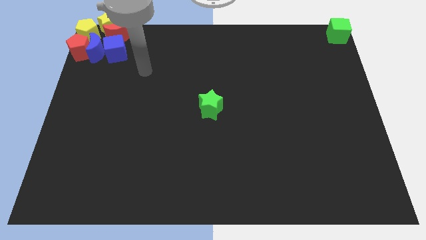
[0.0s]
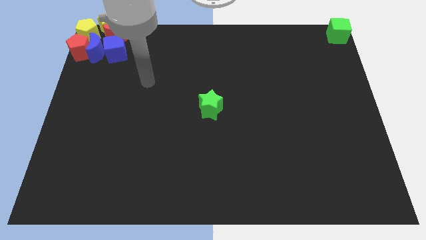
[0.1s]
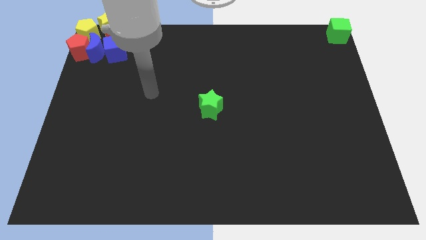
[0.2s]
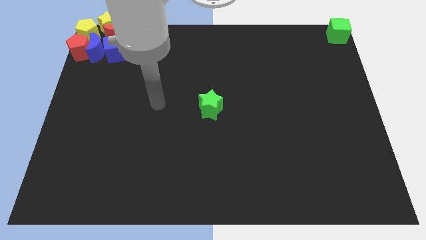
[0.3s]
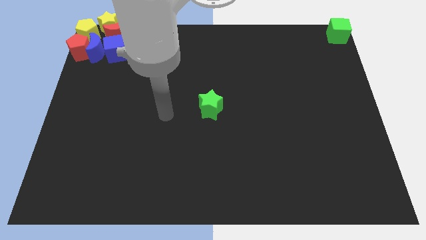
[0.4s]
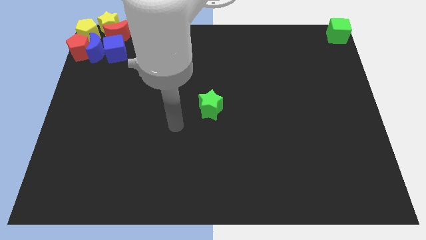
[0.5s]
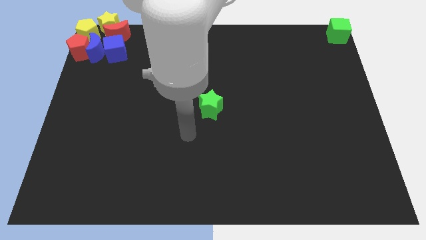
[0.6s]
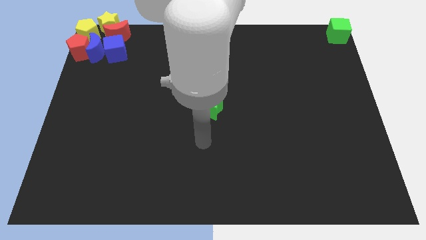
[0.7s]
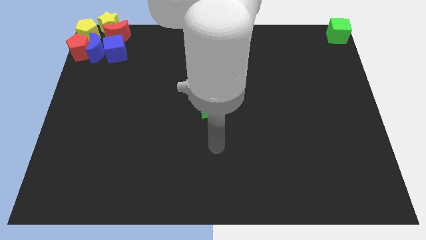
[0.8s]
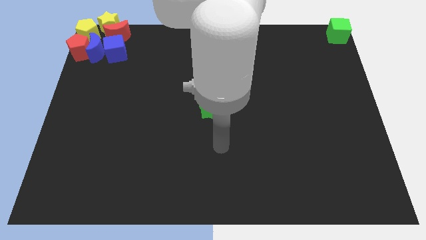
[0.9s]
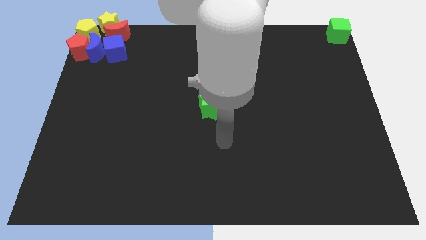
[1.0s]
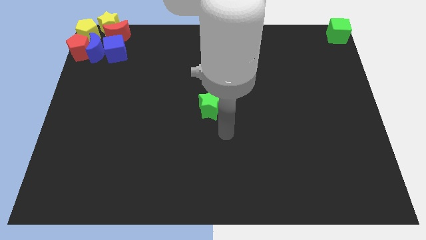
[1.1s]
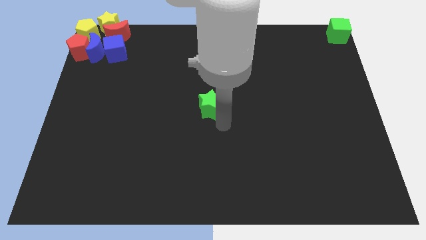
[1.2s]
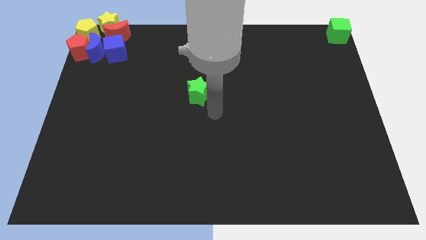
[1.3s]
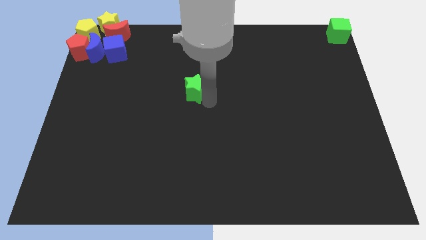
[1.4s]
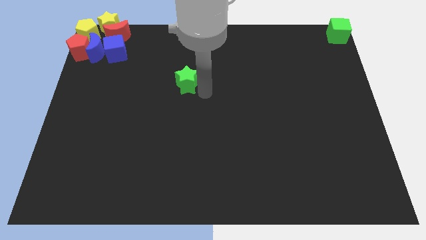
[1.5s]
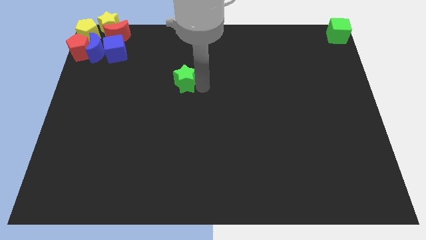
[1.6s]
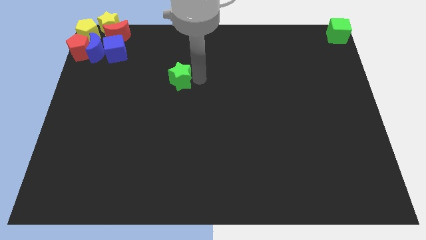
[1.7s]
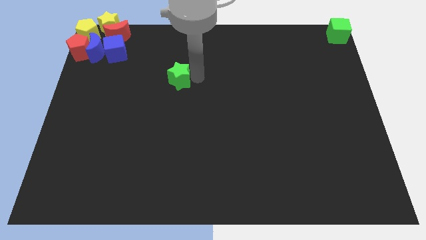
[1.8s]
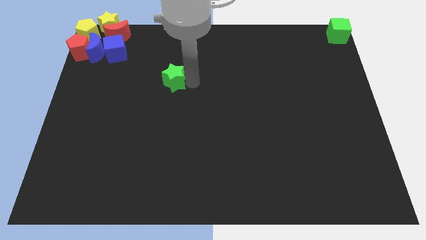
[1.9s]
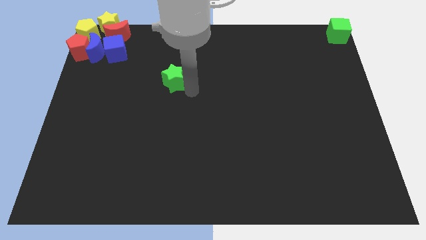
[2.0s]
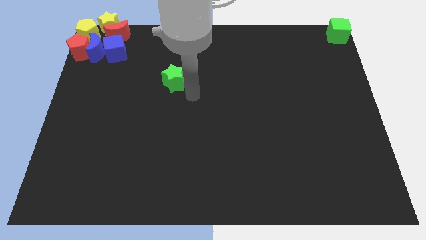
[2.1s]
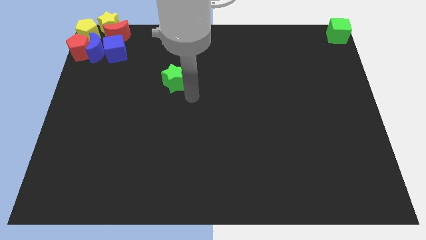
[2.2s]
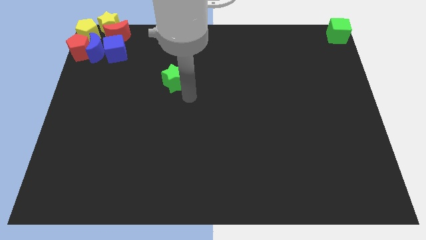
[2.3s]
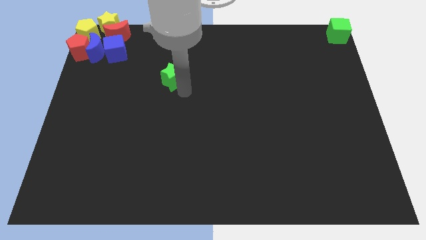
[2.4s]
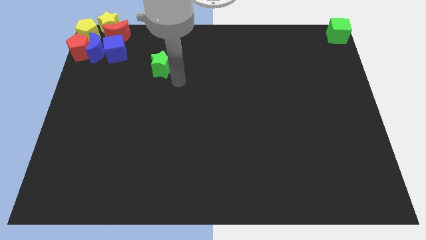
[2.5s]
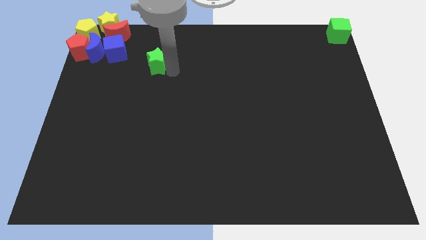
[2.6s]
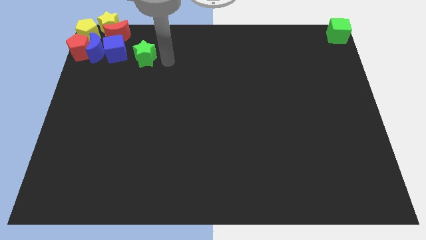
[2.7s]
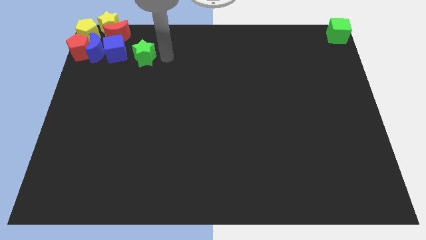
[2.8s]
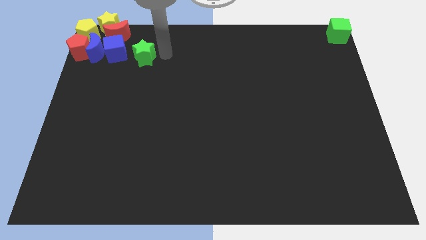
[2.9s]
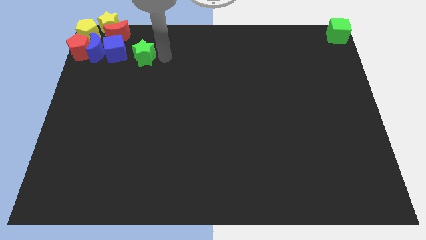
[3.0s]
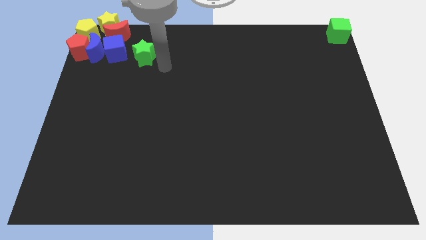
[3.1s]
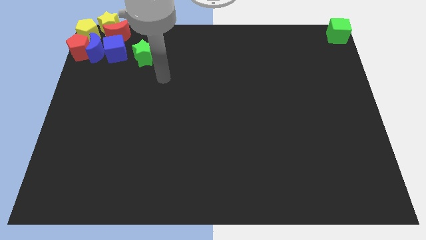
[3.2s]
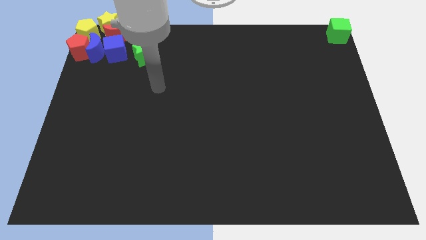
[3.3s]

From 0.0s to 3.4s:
push the green star to the top of the board

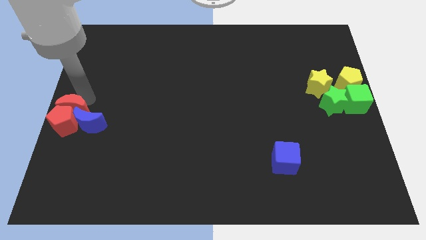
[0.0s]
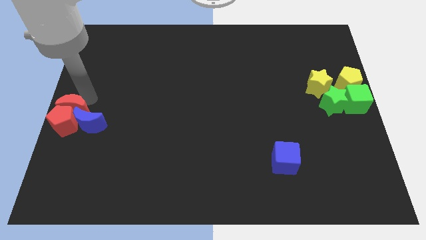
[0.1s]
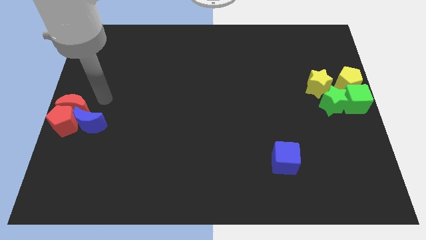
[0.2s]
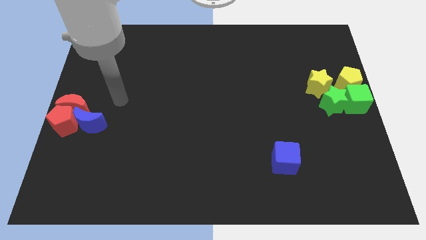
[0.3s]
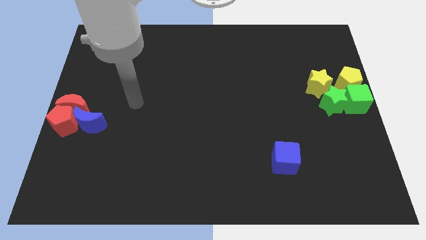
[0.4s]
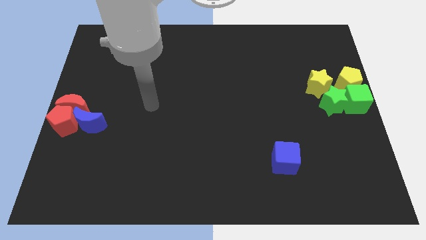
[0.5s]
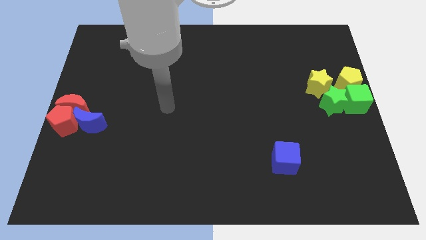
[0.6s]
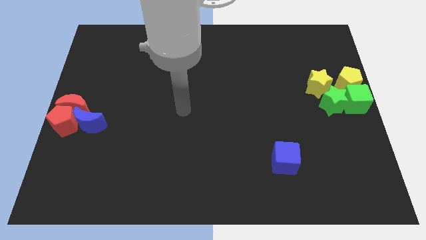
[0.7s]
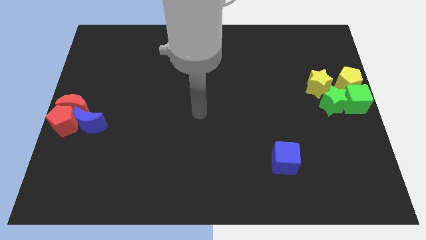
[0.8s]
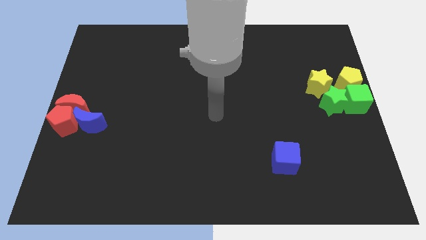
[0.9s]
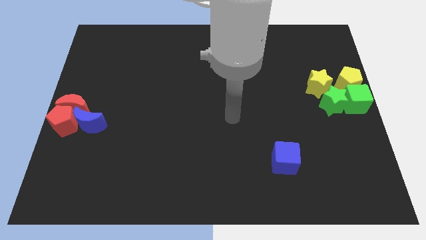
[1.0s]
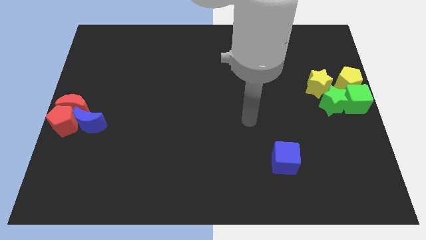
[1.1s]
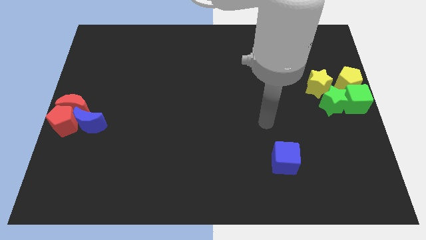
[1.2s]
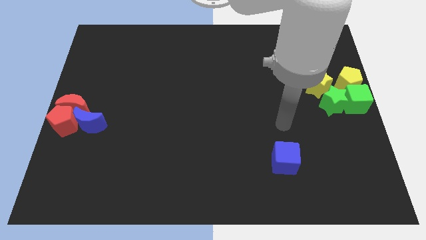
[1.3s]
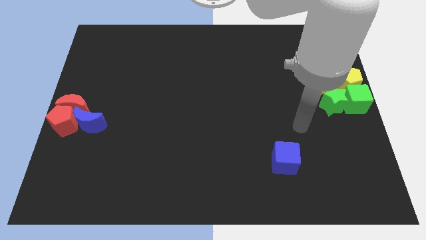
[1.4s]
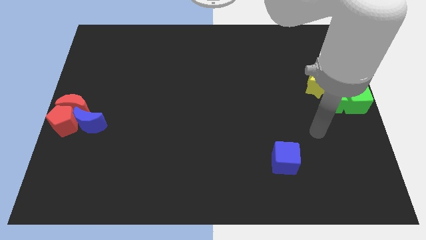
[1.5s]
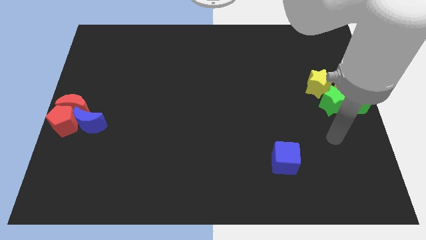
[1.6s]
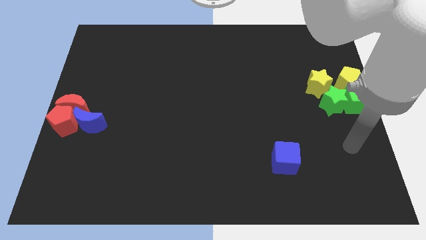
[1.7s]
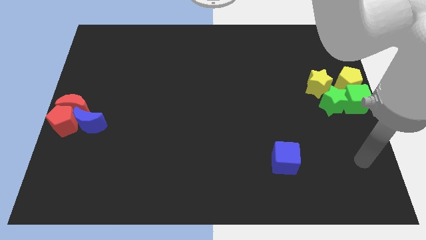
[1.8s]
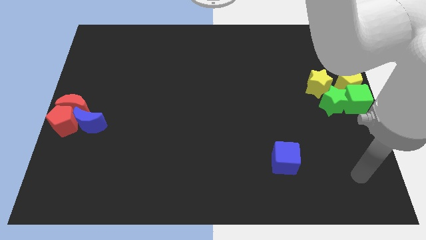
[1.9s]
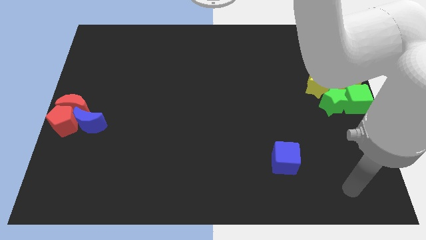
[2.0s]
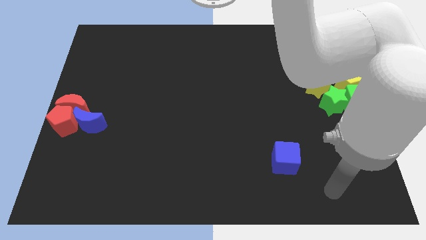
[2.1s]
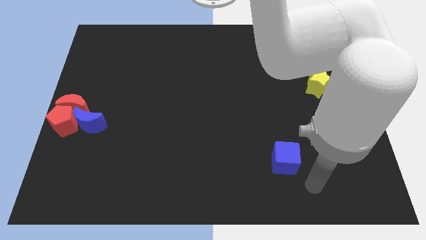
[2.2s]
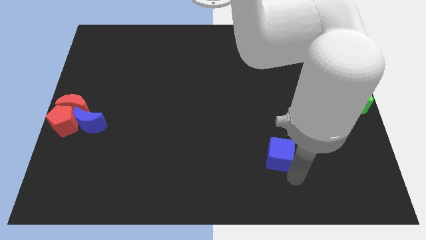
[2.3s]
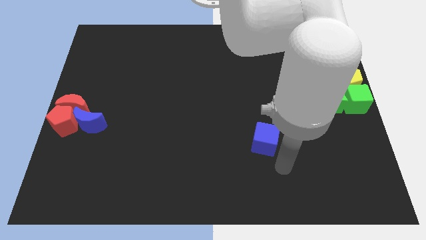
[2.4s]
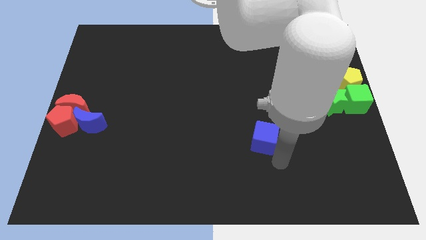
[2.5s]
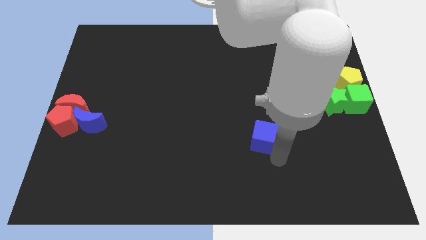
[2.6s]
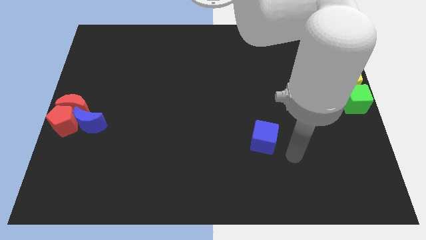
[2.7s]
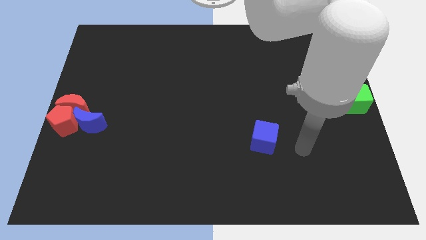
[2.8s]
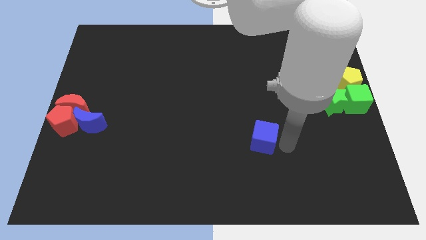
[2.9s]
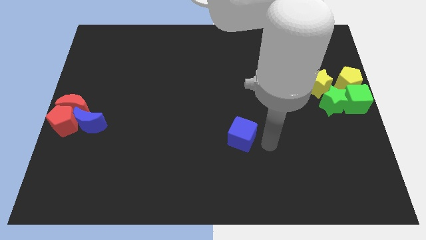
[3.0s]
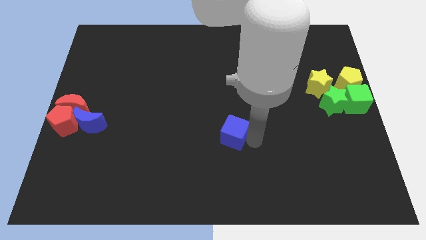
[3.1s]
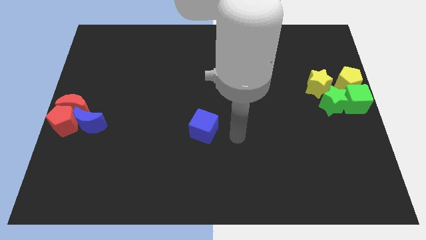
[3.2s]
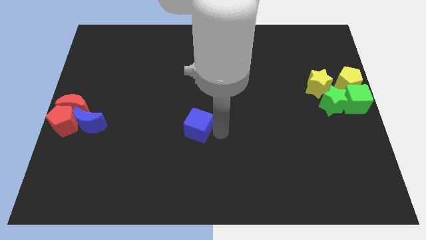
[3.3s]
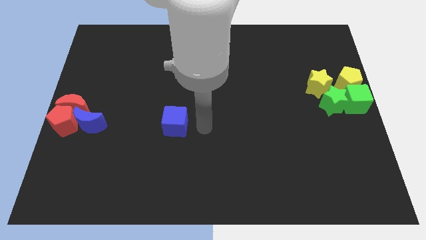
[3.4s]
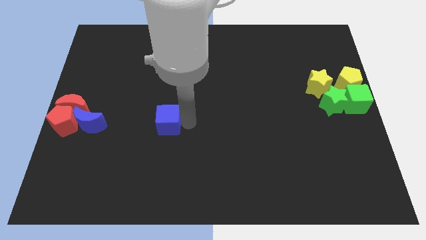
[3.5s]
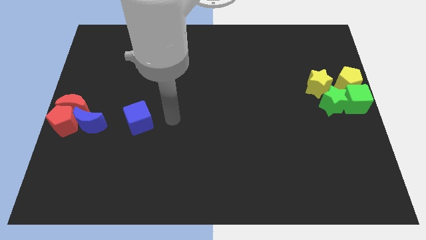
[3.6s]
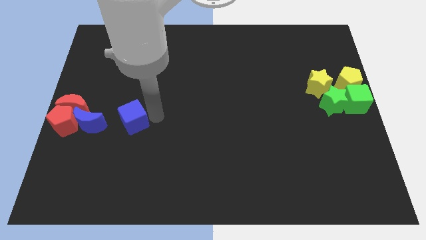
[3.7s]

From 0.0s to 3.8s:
place the blue cube parallel to blue moon

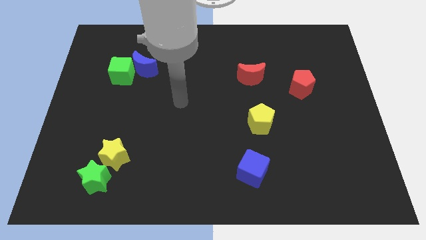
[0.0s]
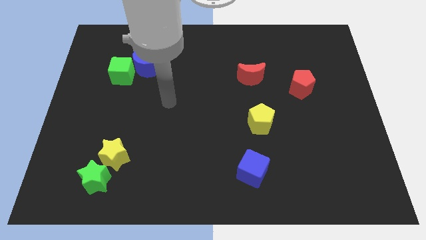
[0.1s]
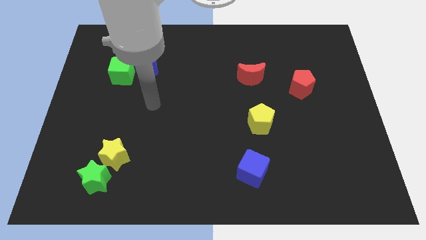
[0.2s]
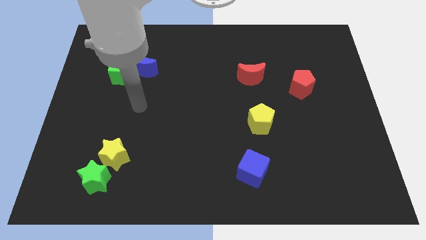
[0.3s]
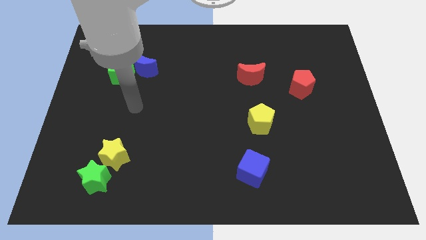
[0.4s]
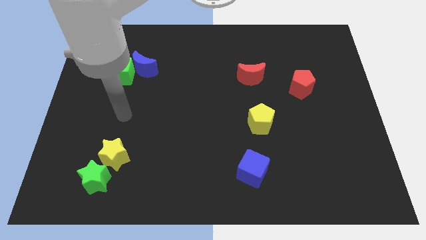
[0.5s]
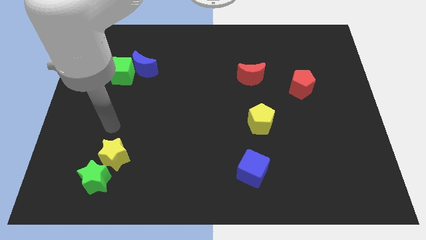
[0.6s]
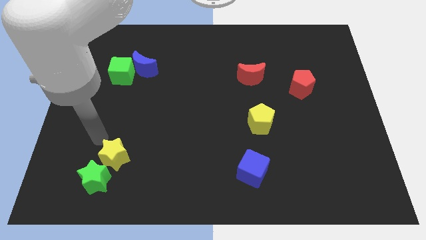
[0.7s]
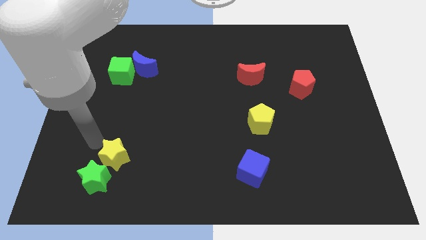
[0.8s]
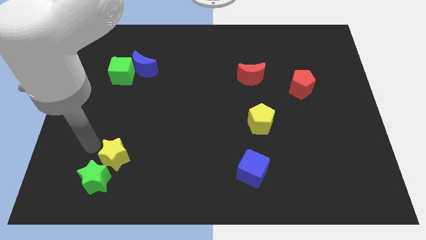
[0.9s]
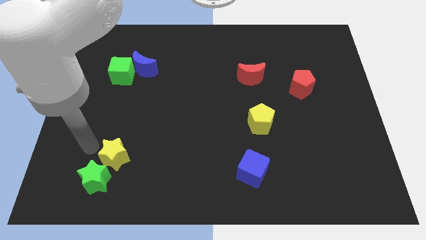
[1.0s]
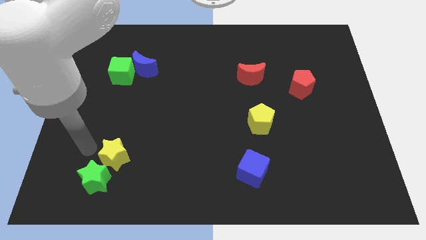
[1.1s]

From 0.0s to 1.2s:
point your hand at the left side of the yellow star

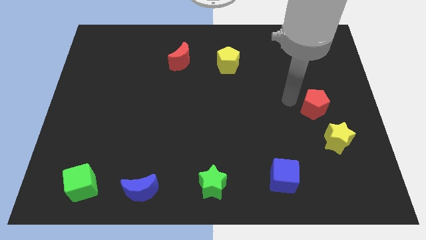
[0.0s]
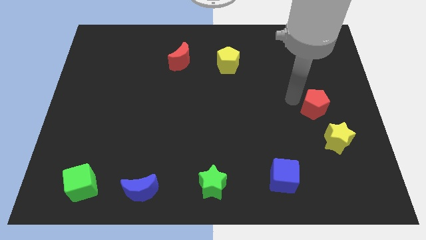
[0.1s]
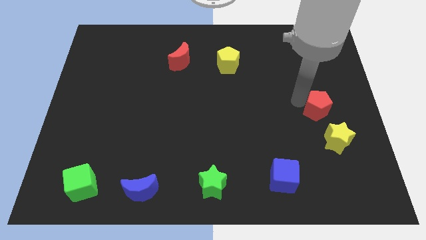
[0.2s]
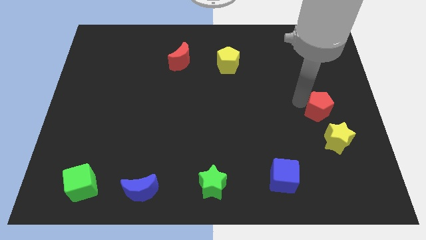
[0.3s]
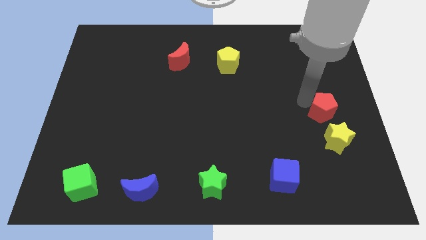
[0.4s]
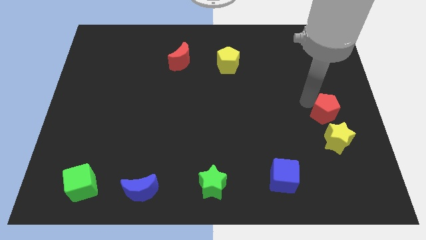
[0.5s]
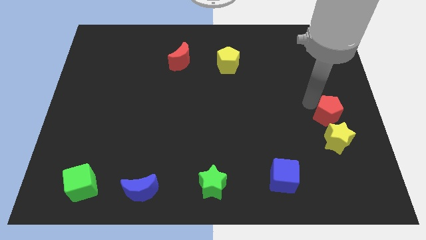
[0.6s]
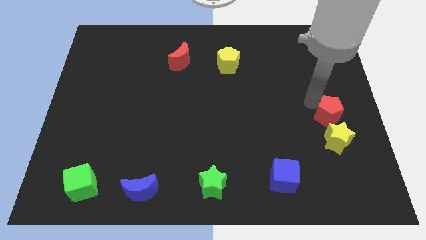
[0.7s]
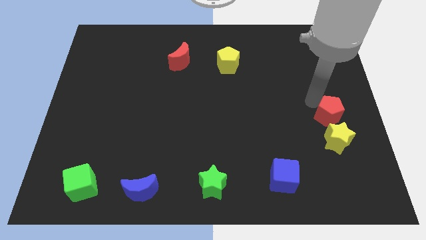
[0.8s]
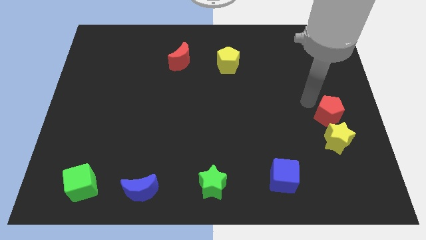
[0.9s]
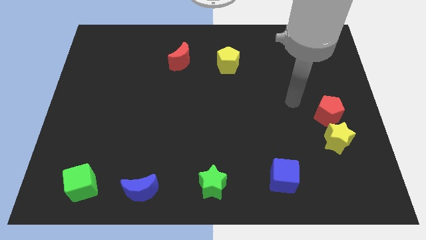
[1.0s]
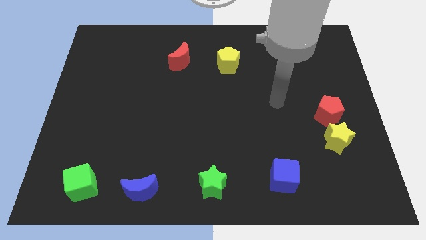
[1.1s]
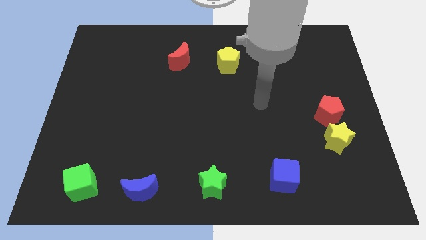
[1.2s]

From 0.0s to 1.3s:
place the red pentagon above the yellow star
